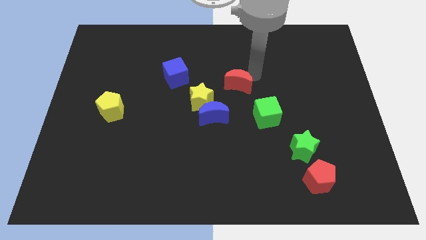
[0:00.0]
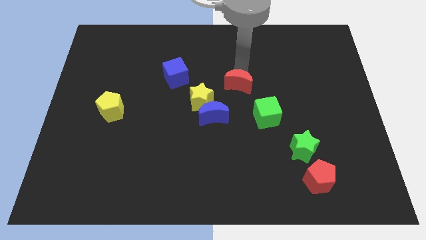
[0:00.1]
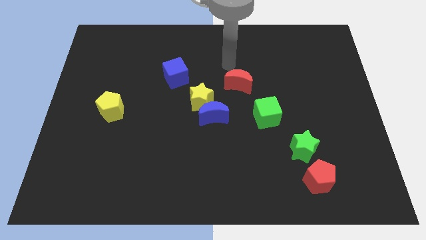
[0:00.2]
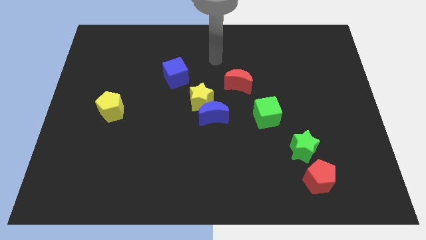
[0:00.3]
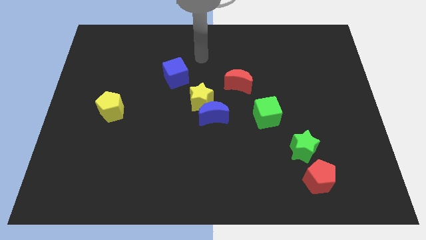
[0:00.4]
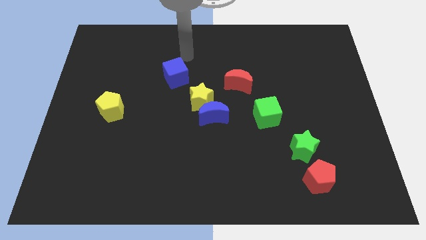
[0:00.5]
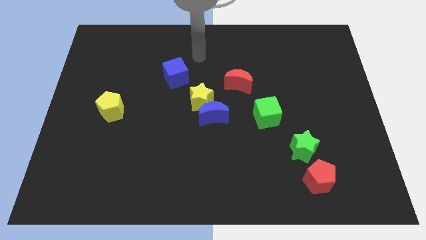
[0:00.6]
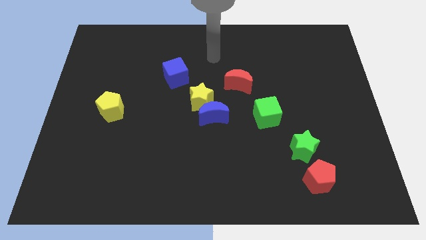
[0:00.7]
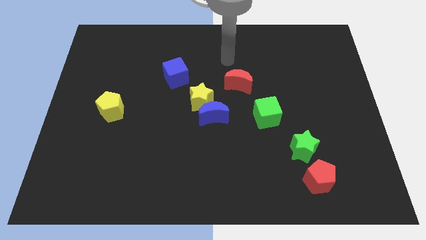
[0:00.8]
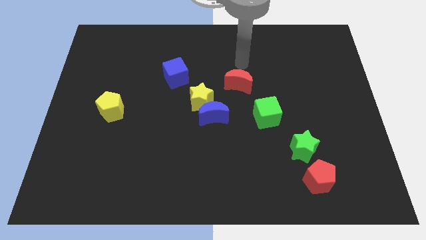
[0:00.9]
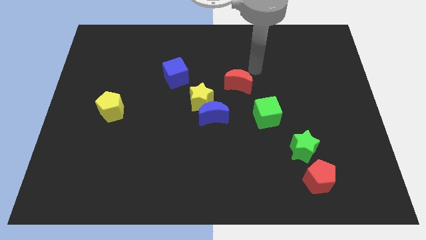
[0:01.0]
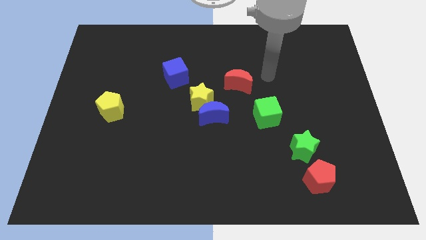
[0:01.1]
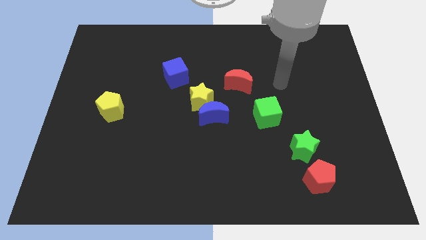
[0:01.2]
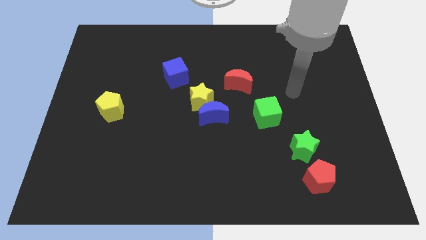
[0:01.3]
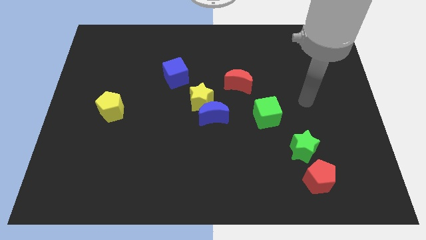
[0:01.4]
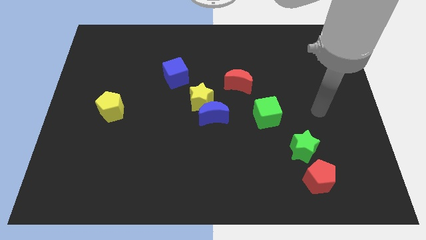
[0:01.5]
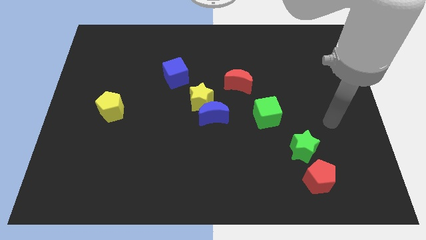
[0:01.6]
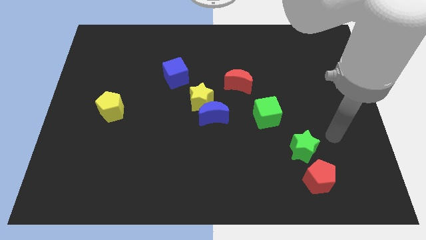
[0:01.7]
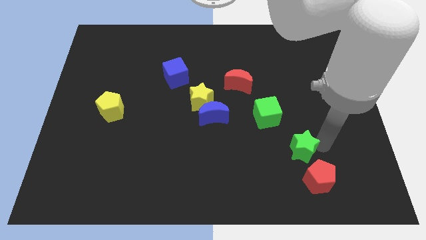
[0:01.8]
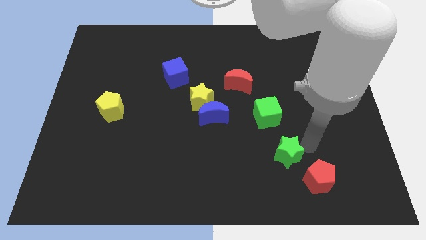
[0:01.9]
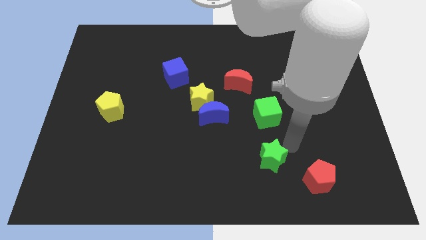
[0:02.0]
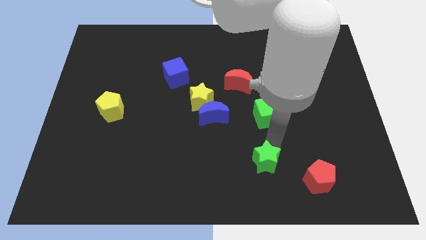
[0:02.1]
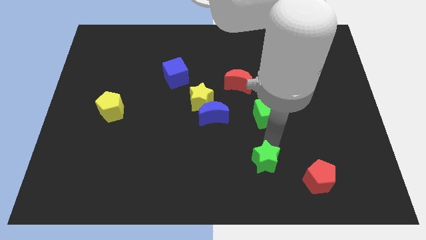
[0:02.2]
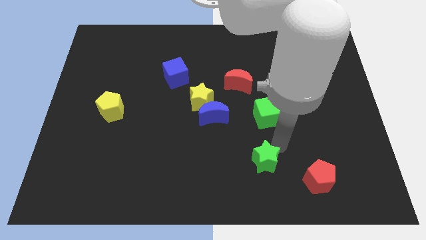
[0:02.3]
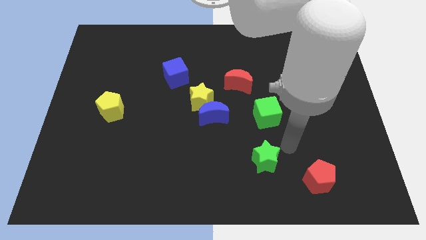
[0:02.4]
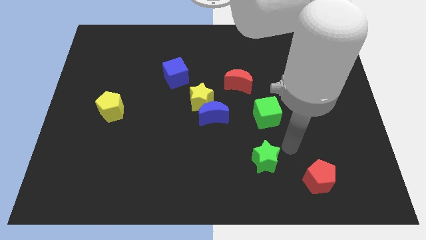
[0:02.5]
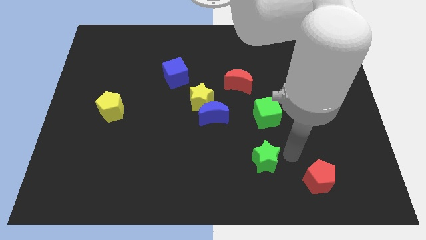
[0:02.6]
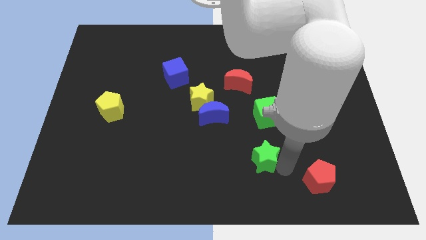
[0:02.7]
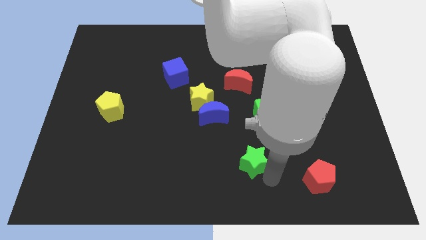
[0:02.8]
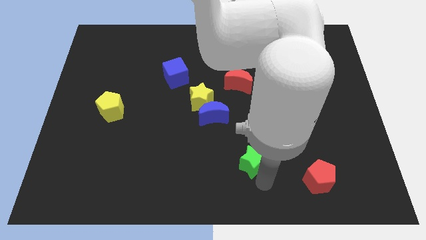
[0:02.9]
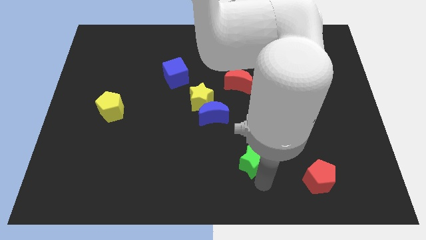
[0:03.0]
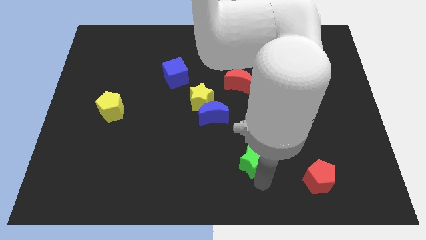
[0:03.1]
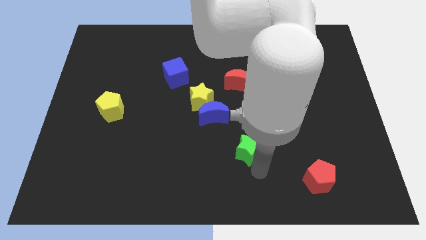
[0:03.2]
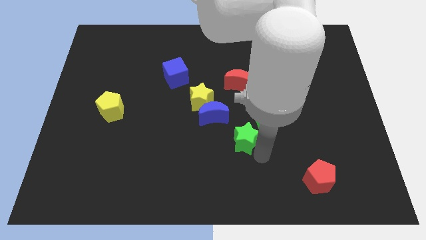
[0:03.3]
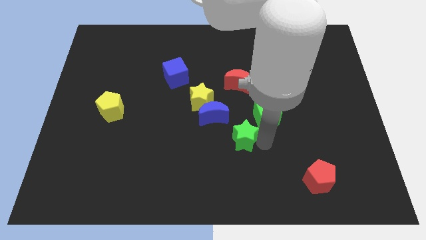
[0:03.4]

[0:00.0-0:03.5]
push the green star towards left

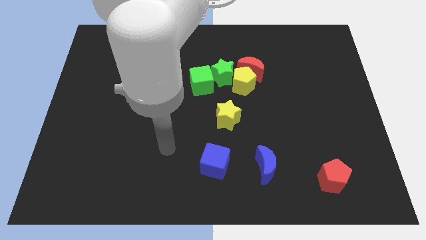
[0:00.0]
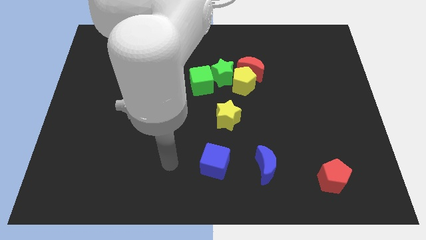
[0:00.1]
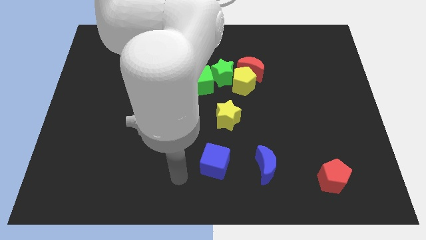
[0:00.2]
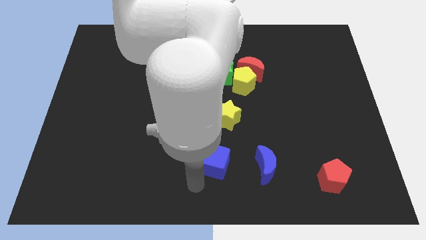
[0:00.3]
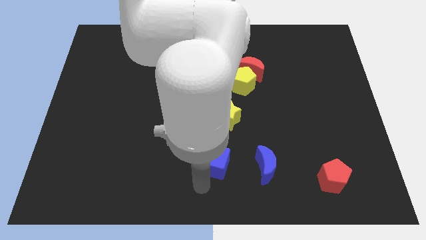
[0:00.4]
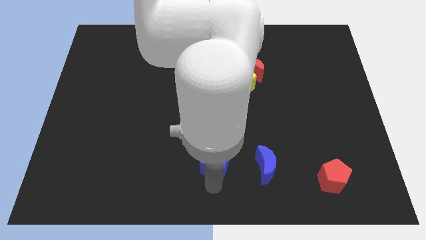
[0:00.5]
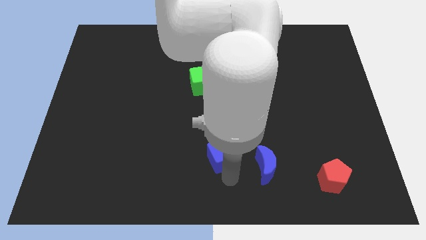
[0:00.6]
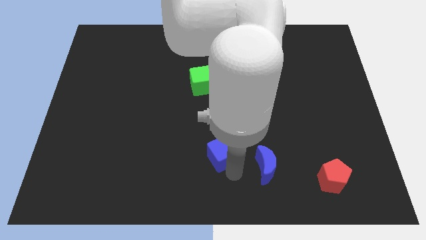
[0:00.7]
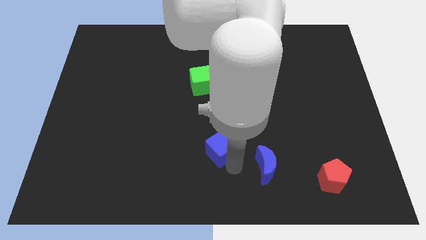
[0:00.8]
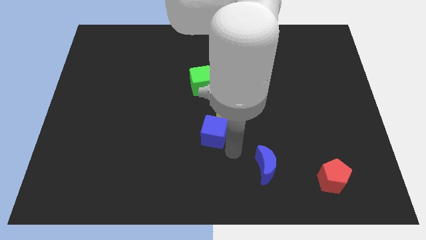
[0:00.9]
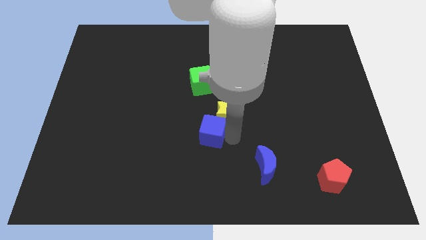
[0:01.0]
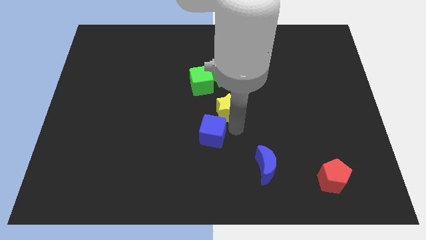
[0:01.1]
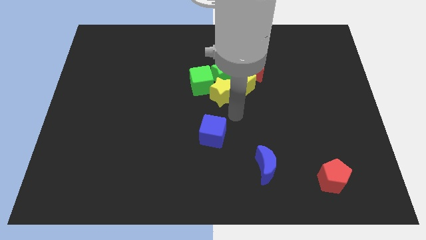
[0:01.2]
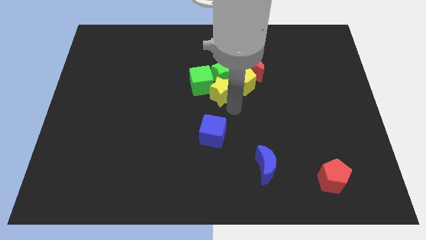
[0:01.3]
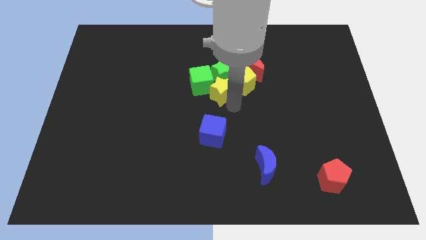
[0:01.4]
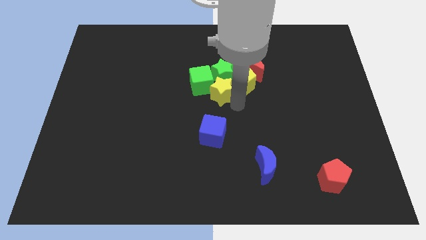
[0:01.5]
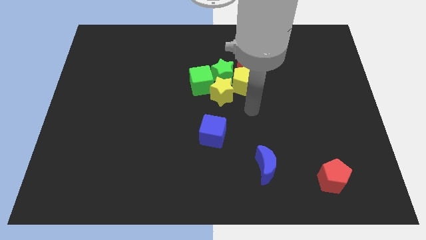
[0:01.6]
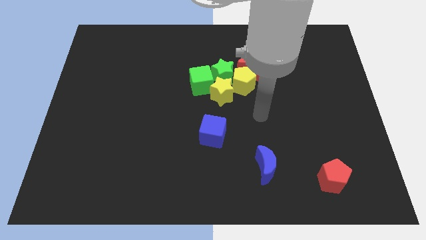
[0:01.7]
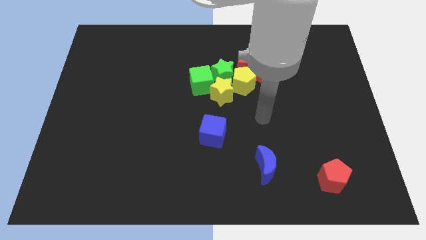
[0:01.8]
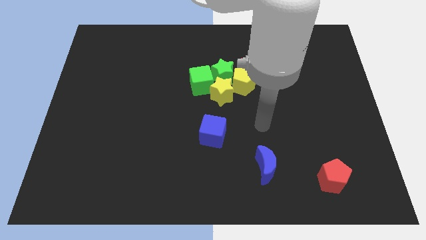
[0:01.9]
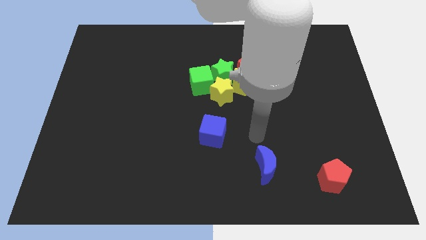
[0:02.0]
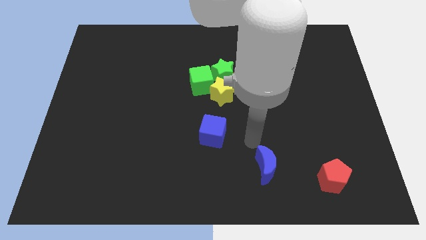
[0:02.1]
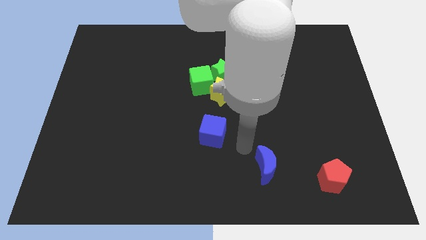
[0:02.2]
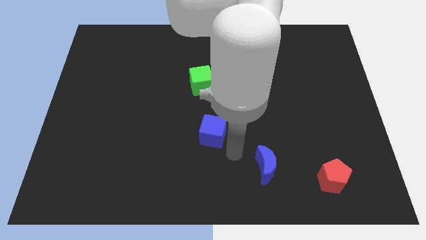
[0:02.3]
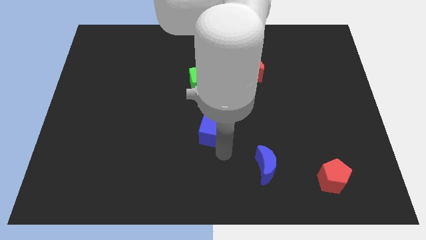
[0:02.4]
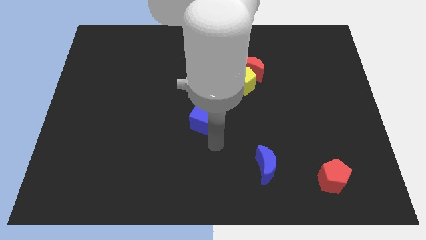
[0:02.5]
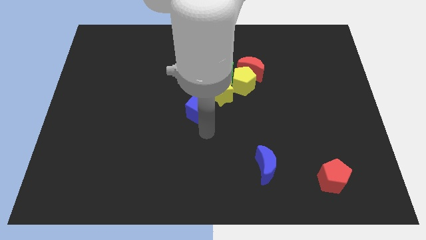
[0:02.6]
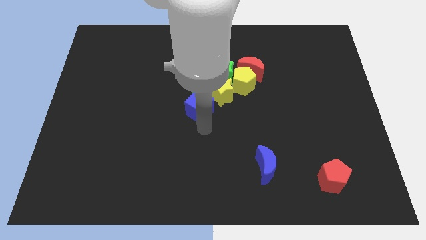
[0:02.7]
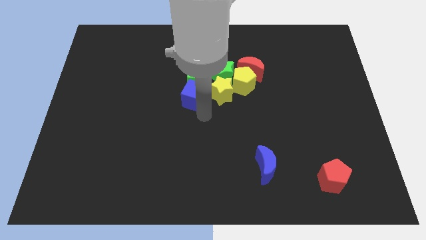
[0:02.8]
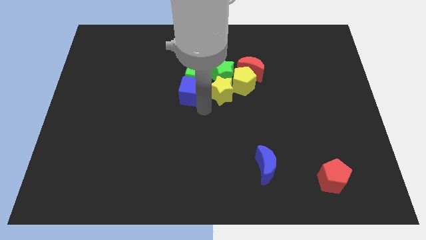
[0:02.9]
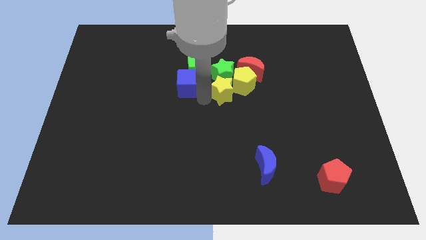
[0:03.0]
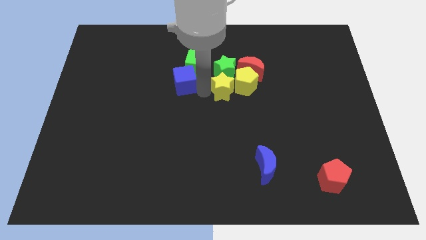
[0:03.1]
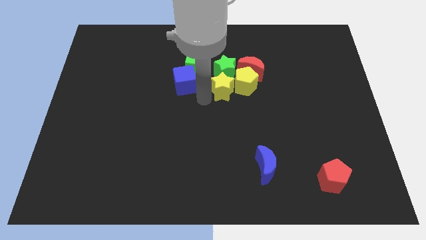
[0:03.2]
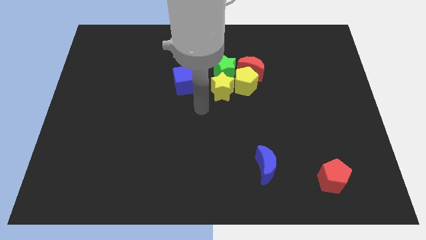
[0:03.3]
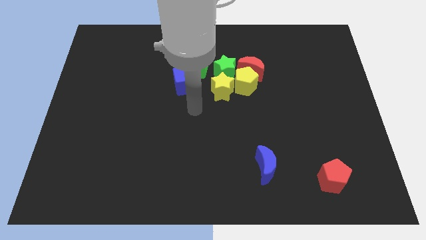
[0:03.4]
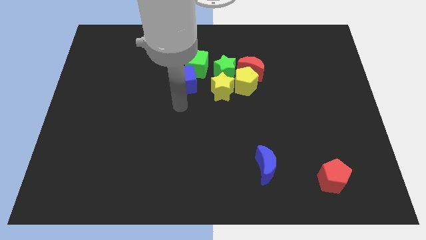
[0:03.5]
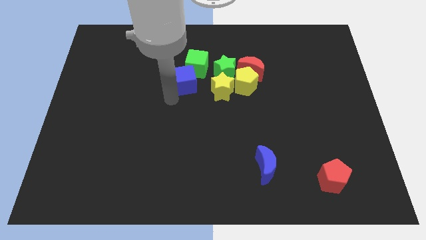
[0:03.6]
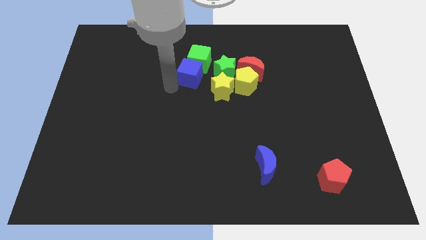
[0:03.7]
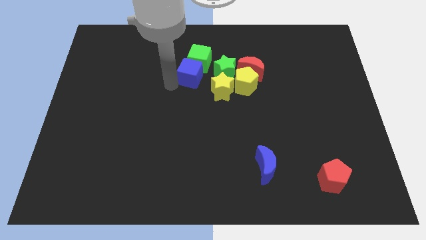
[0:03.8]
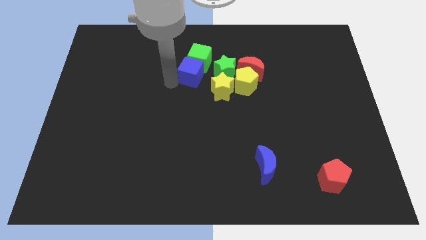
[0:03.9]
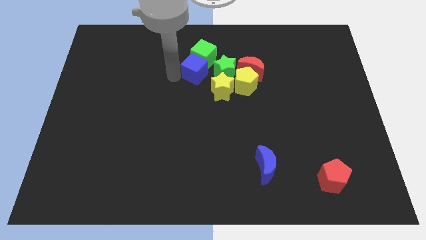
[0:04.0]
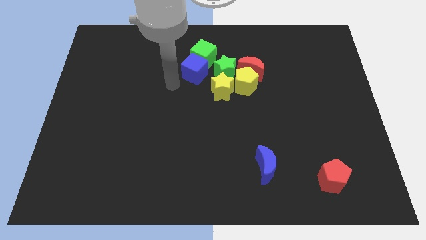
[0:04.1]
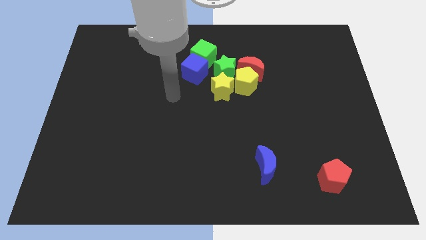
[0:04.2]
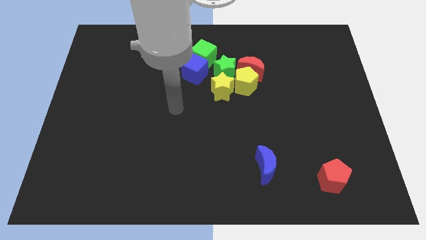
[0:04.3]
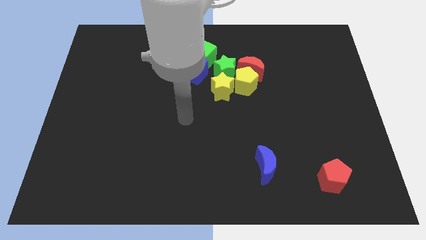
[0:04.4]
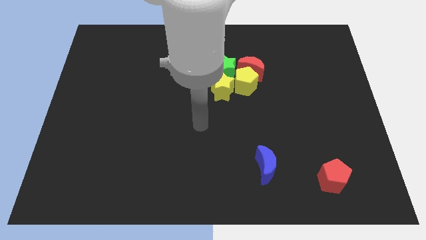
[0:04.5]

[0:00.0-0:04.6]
move the blue cube into the green cube

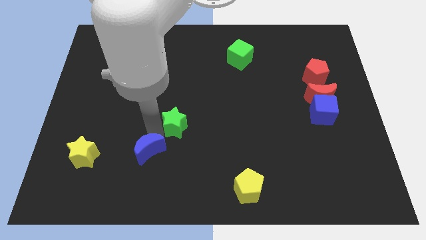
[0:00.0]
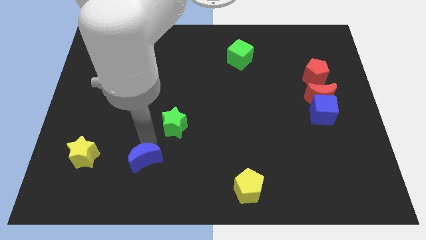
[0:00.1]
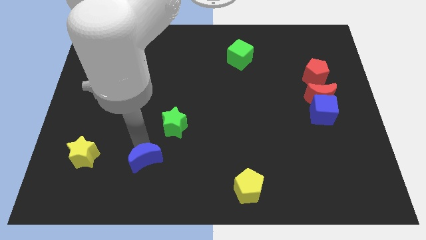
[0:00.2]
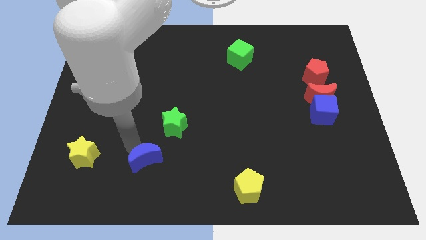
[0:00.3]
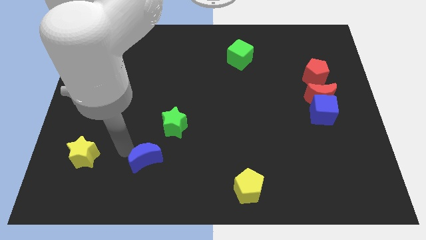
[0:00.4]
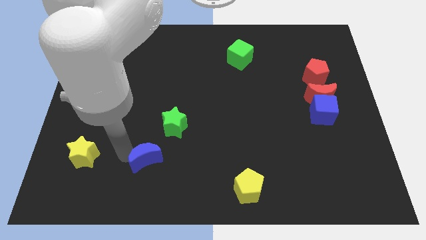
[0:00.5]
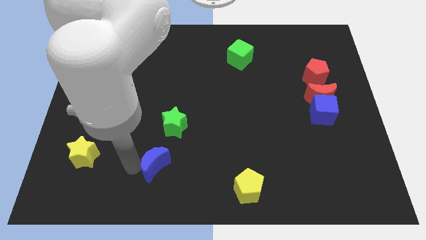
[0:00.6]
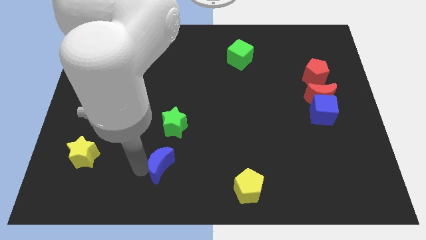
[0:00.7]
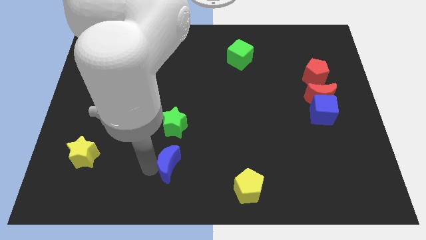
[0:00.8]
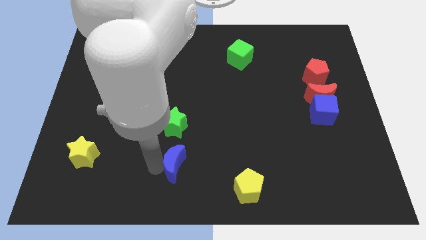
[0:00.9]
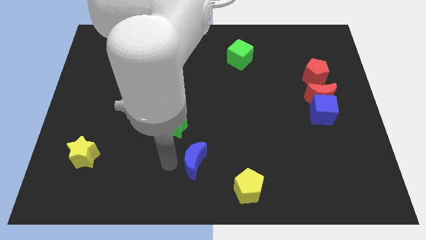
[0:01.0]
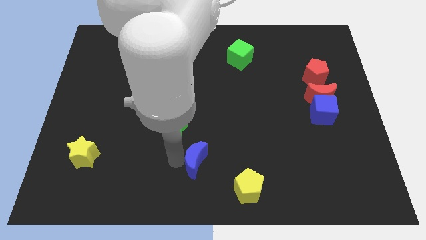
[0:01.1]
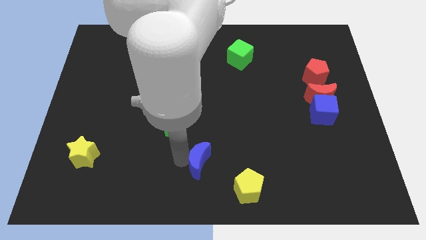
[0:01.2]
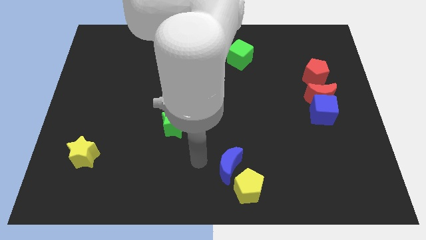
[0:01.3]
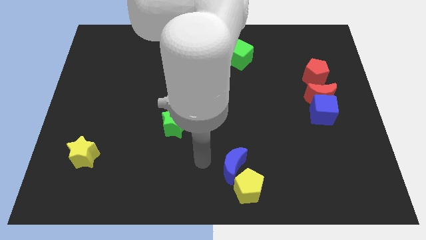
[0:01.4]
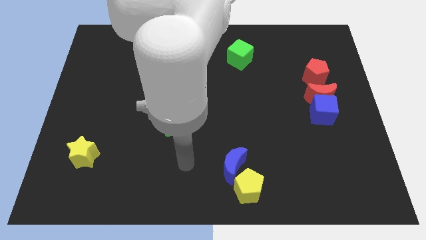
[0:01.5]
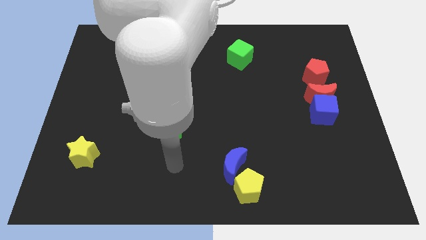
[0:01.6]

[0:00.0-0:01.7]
push the blue crescent close to the yellow pentagon
